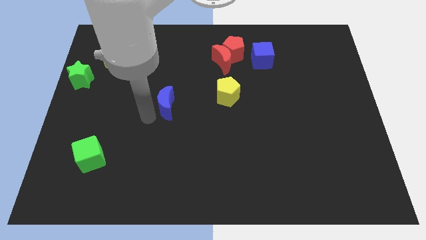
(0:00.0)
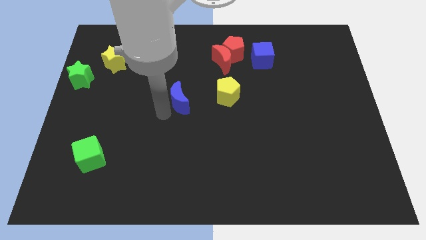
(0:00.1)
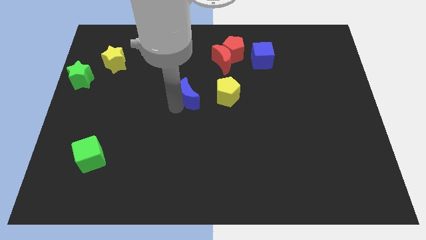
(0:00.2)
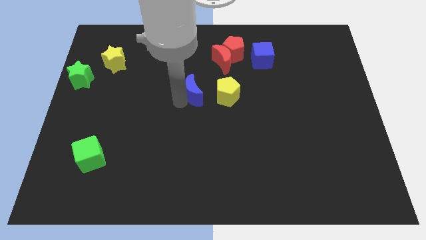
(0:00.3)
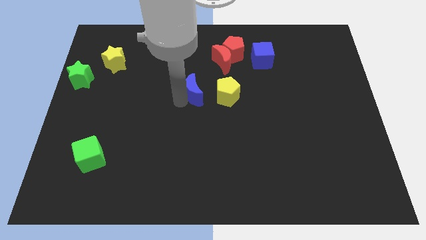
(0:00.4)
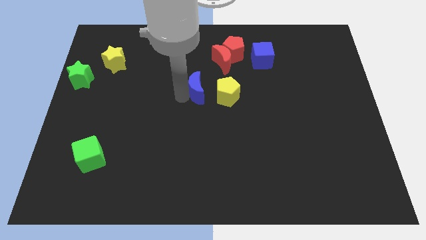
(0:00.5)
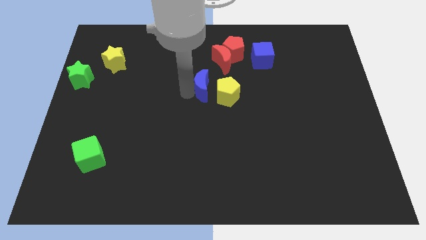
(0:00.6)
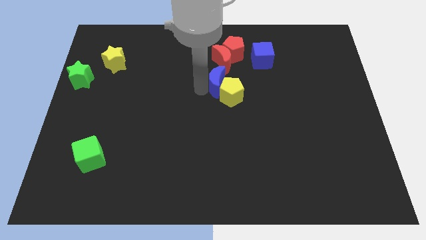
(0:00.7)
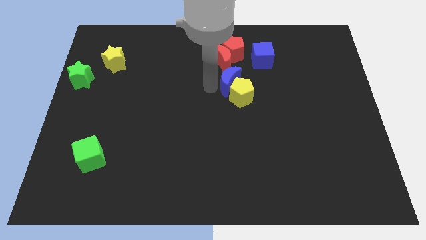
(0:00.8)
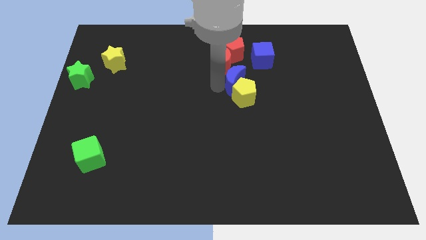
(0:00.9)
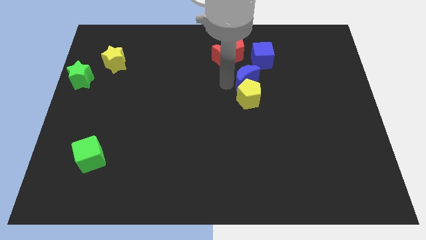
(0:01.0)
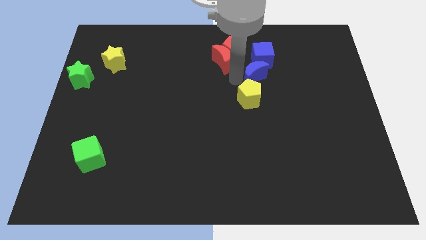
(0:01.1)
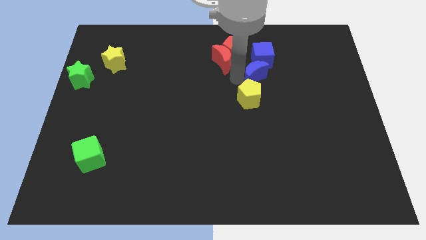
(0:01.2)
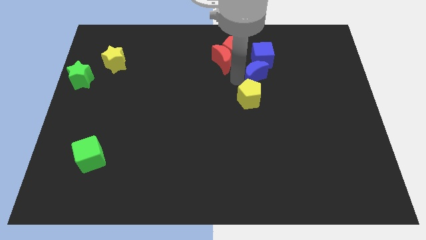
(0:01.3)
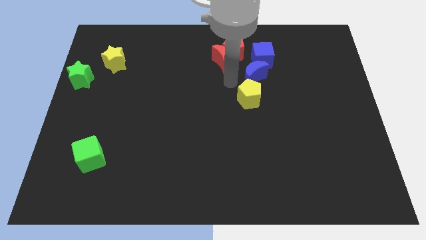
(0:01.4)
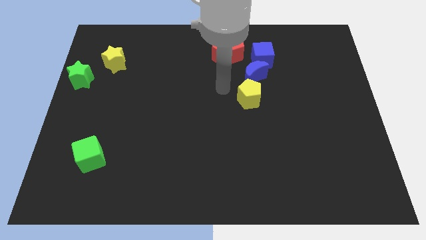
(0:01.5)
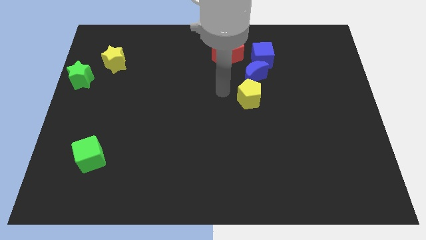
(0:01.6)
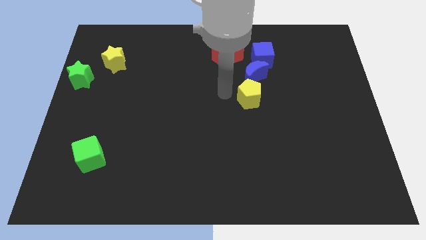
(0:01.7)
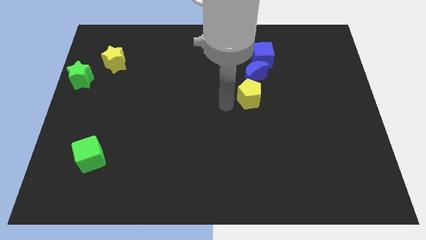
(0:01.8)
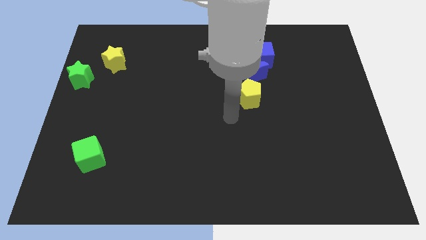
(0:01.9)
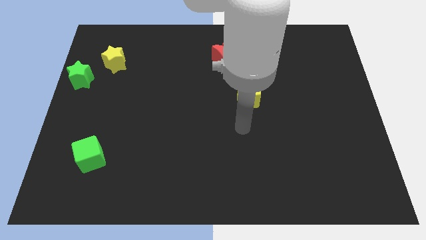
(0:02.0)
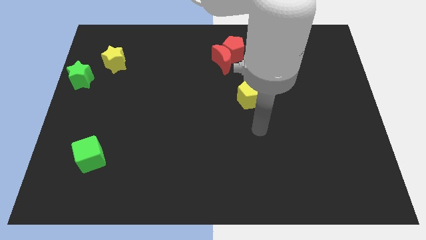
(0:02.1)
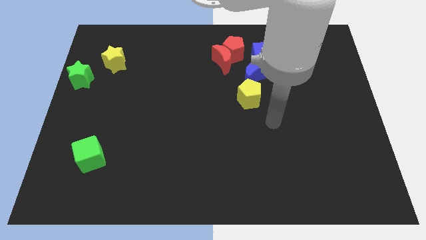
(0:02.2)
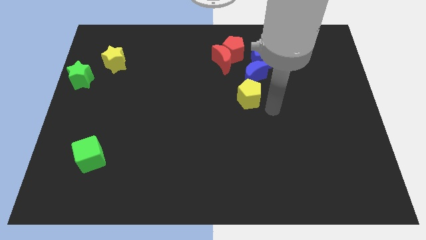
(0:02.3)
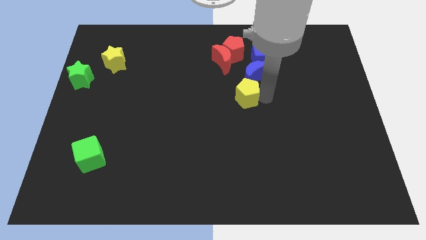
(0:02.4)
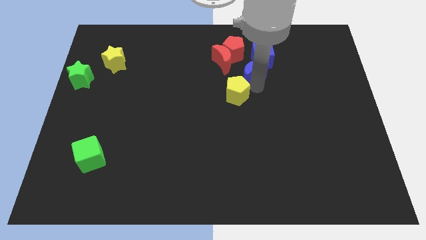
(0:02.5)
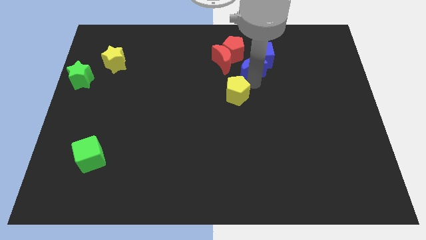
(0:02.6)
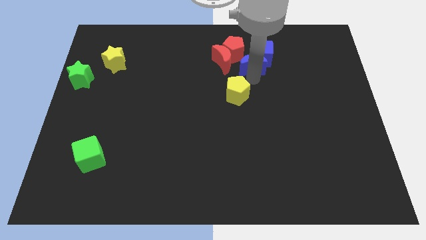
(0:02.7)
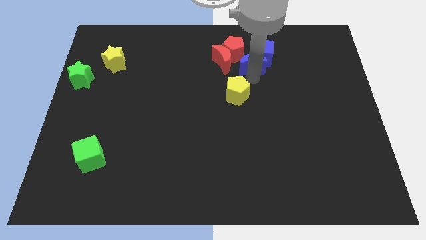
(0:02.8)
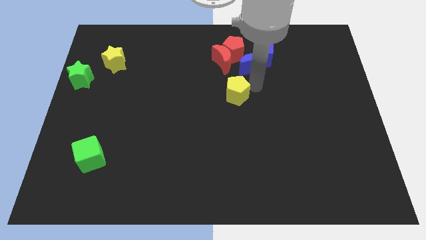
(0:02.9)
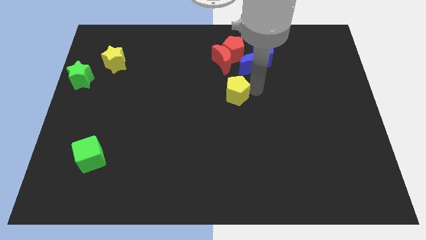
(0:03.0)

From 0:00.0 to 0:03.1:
move the blue crescent into the blue cube

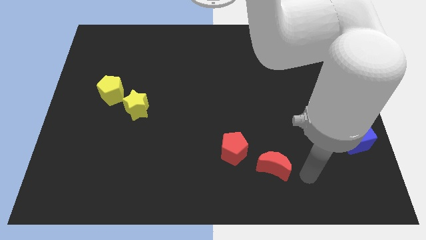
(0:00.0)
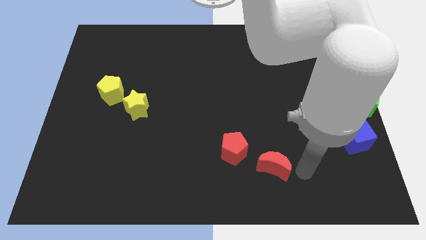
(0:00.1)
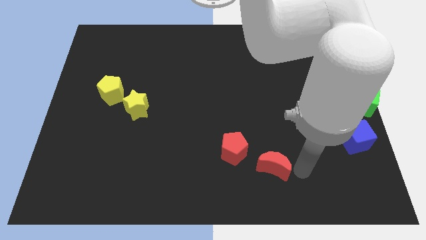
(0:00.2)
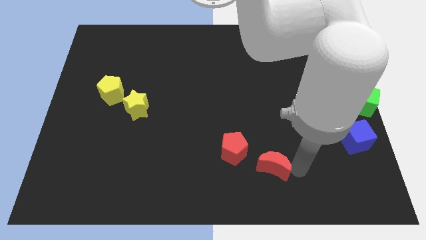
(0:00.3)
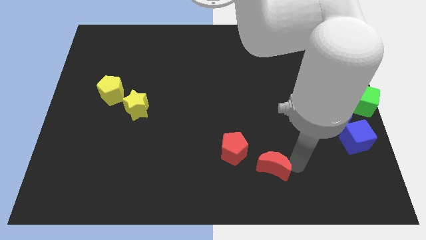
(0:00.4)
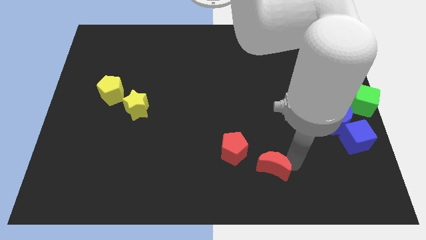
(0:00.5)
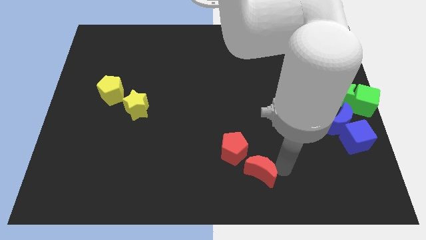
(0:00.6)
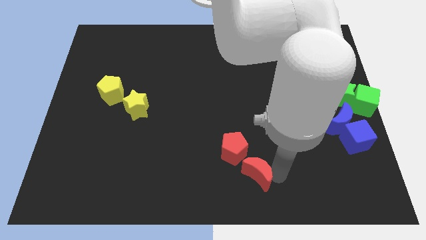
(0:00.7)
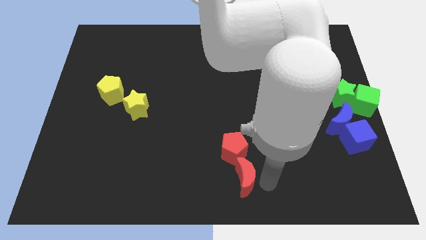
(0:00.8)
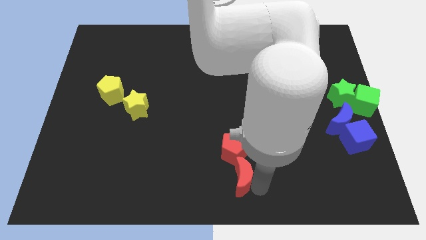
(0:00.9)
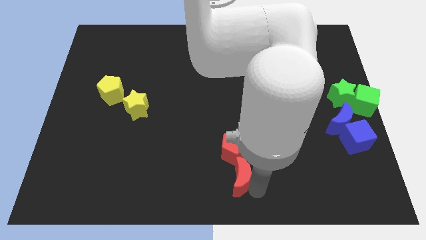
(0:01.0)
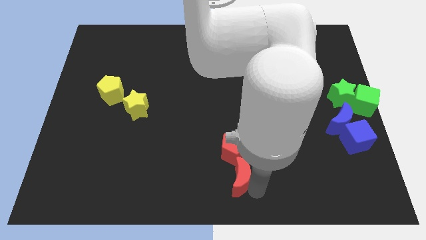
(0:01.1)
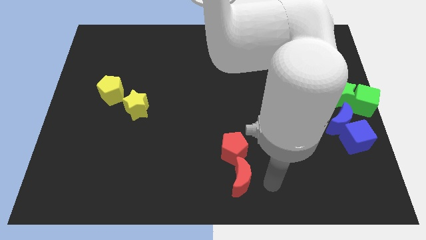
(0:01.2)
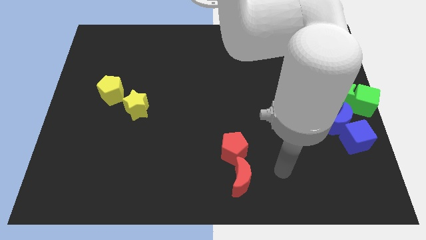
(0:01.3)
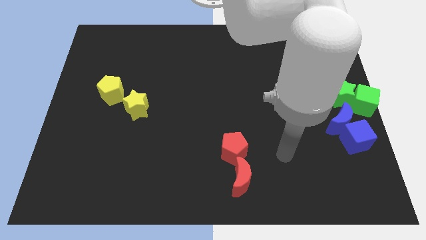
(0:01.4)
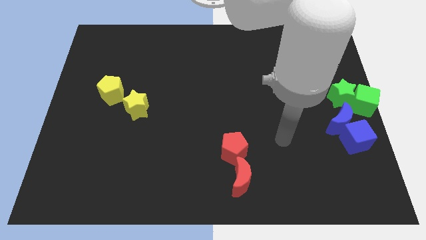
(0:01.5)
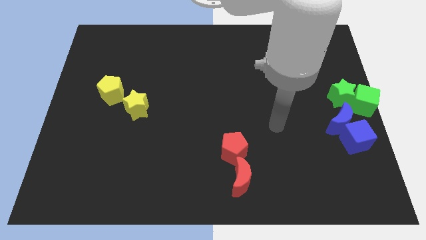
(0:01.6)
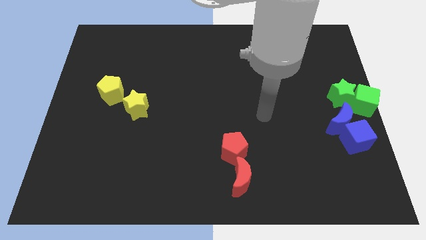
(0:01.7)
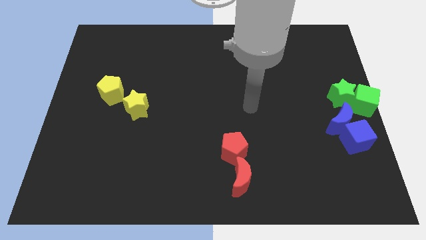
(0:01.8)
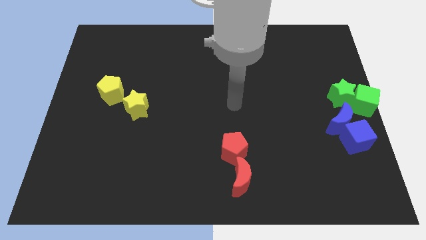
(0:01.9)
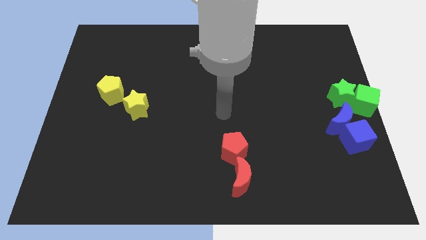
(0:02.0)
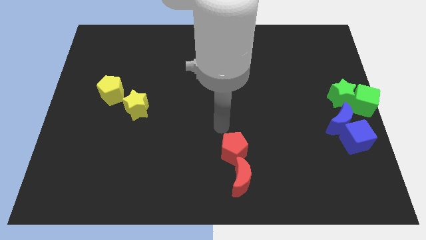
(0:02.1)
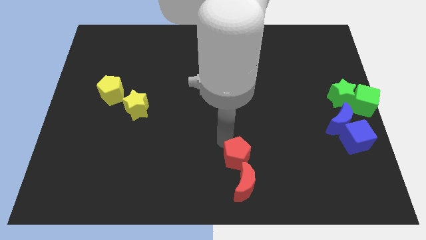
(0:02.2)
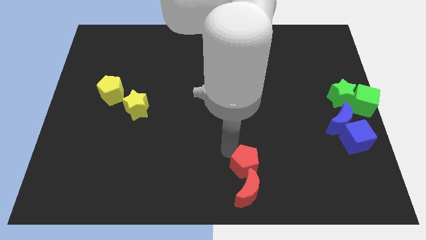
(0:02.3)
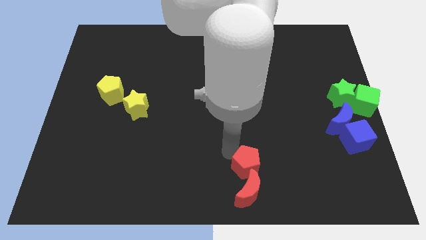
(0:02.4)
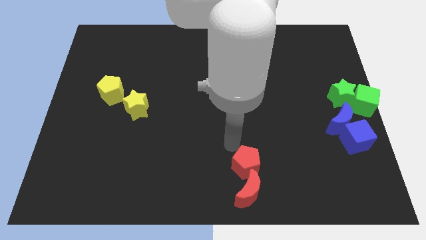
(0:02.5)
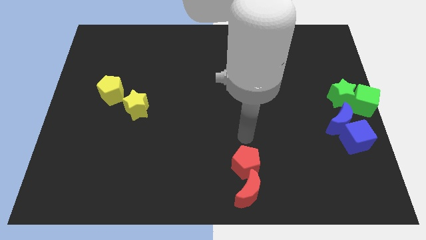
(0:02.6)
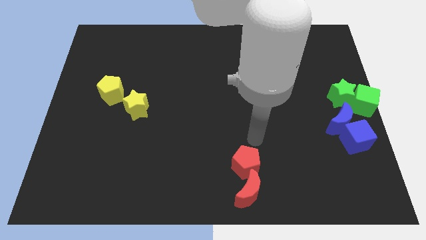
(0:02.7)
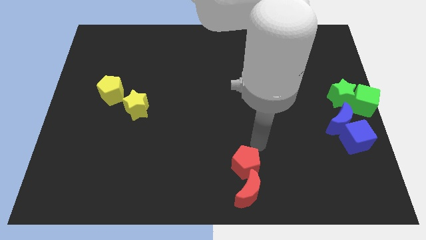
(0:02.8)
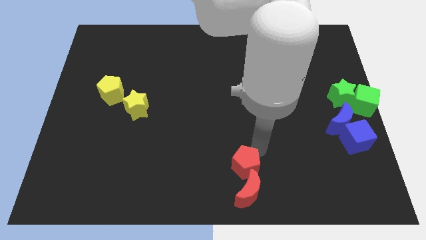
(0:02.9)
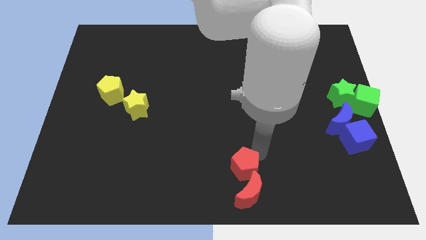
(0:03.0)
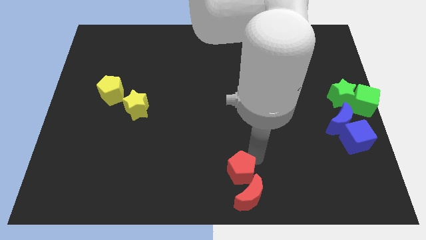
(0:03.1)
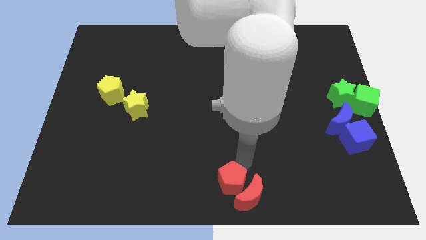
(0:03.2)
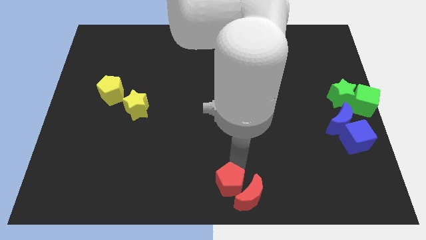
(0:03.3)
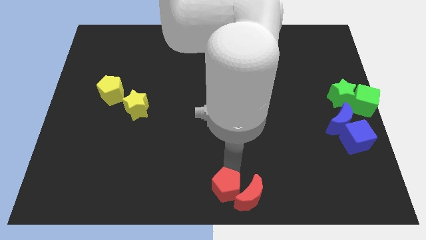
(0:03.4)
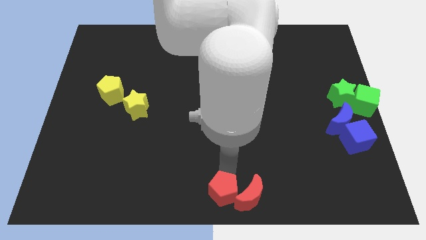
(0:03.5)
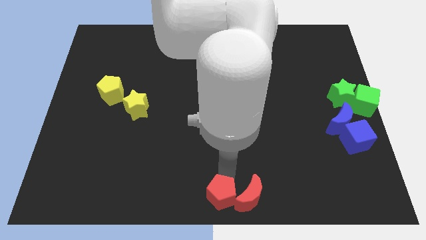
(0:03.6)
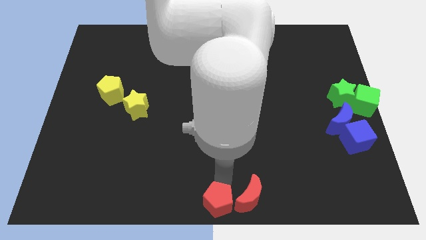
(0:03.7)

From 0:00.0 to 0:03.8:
place the red blocks at the bottom center of the board

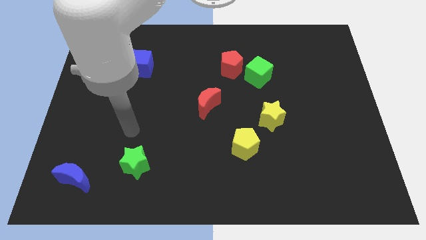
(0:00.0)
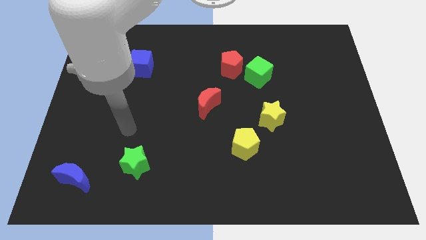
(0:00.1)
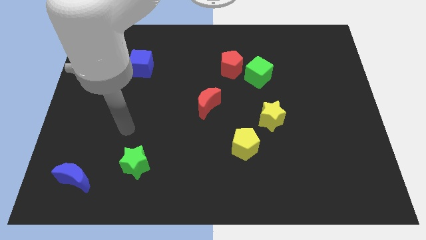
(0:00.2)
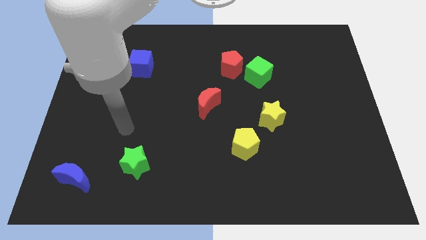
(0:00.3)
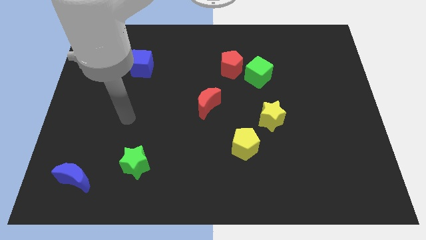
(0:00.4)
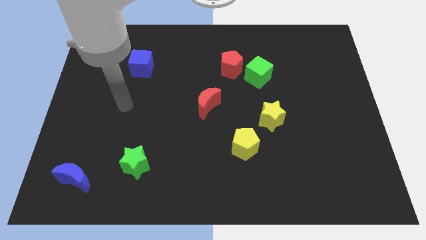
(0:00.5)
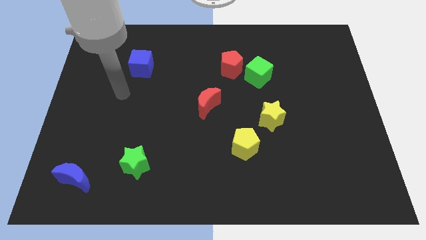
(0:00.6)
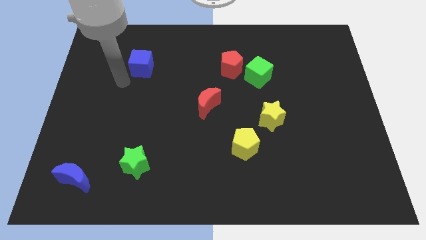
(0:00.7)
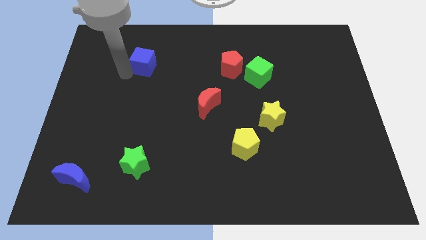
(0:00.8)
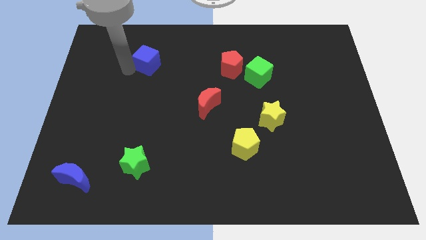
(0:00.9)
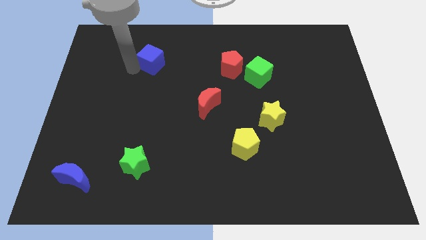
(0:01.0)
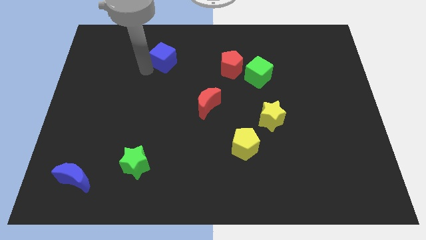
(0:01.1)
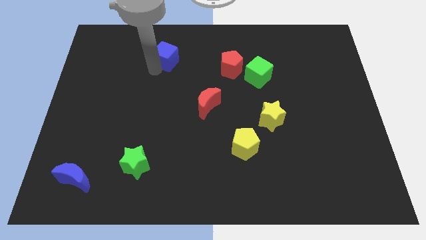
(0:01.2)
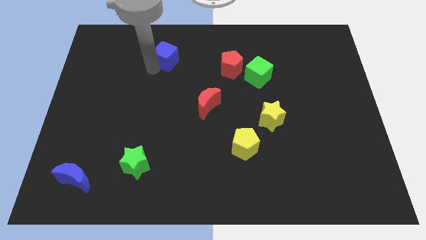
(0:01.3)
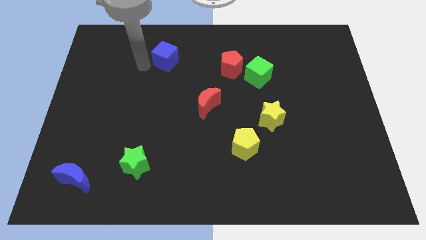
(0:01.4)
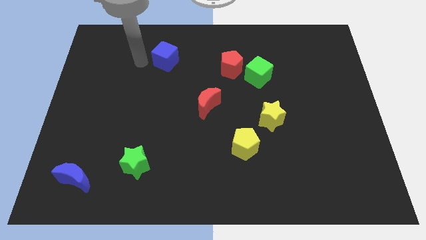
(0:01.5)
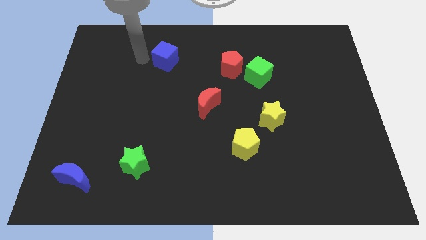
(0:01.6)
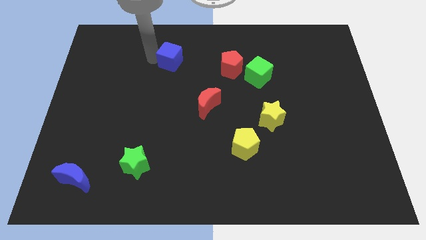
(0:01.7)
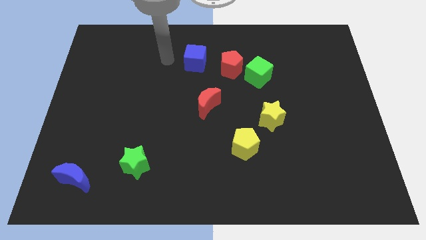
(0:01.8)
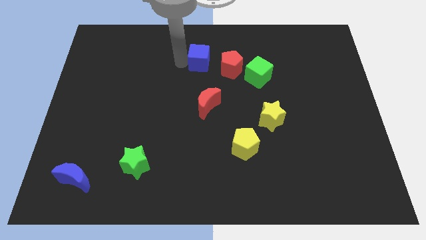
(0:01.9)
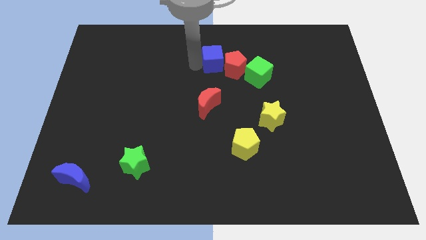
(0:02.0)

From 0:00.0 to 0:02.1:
slide the blue cube into the red pentagon
